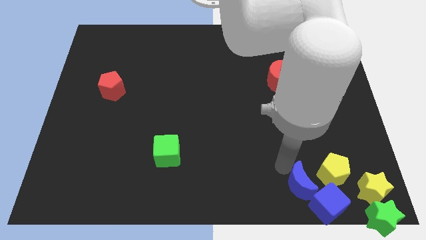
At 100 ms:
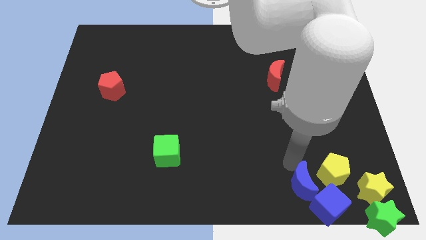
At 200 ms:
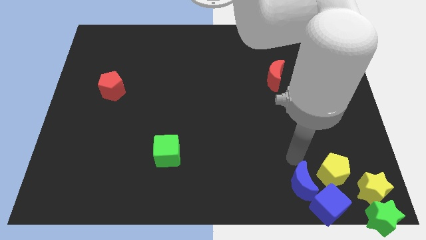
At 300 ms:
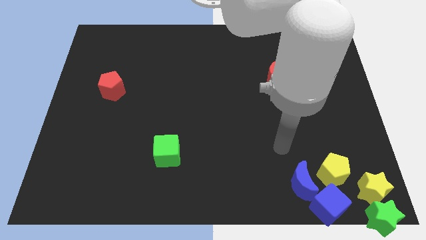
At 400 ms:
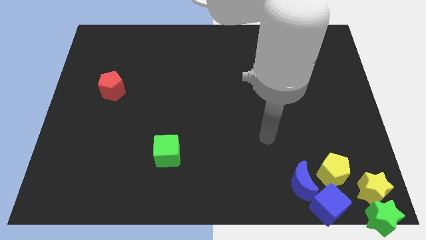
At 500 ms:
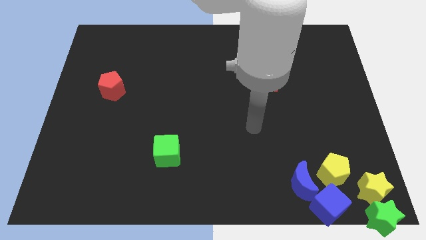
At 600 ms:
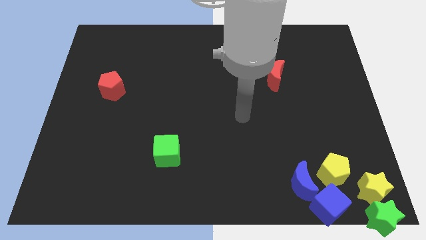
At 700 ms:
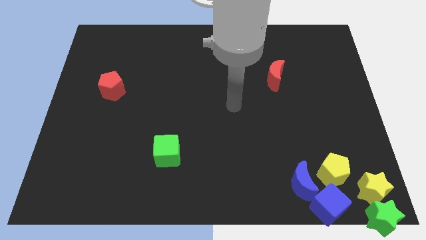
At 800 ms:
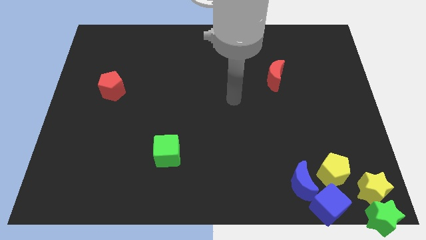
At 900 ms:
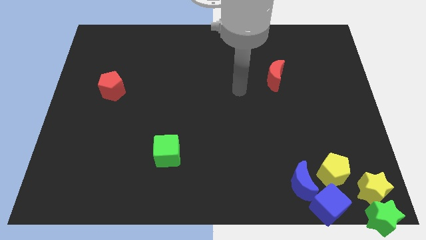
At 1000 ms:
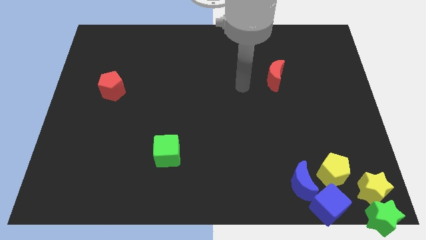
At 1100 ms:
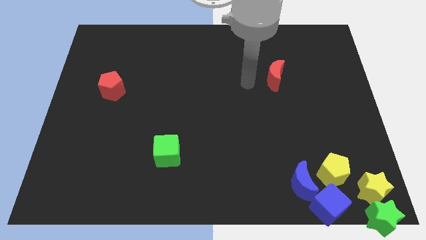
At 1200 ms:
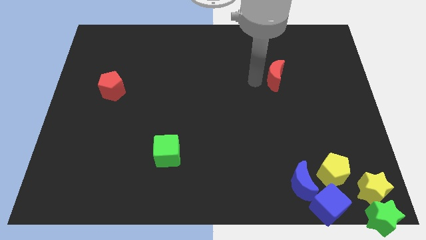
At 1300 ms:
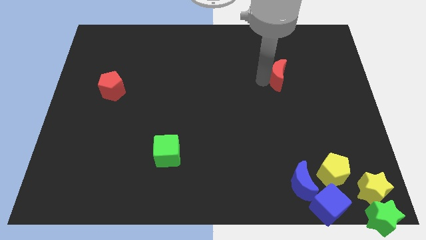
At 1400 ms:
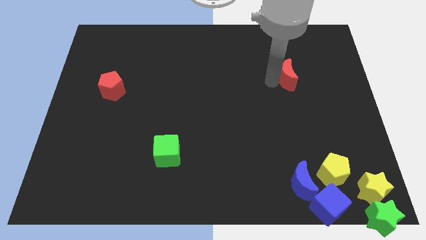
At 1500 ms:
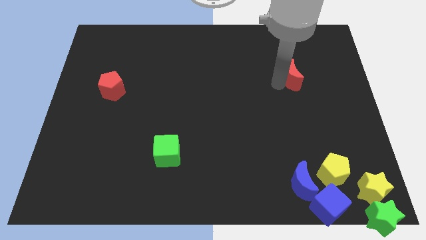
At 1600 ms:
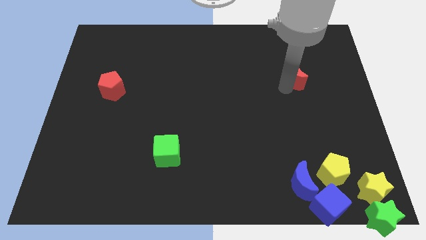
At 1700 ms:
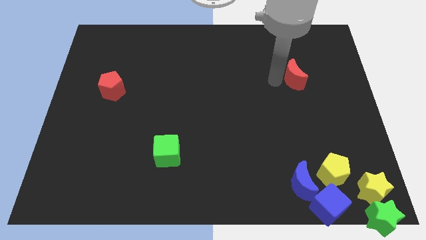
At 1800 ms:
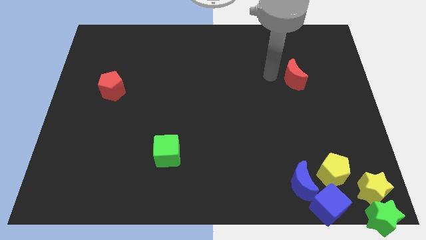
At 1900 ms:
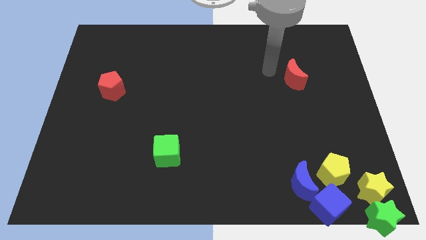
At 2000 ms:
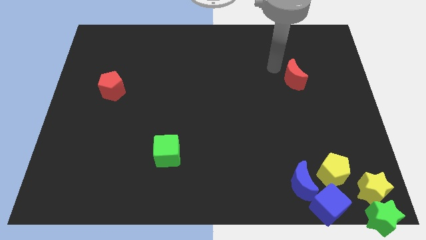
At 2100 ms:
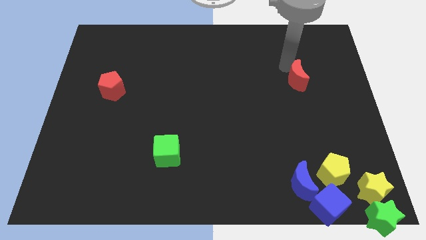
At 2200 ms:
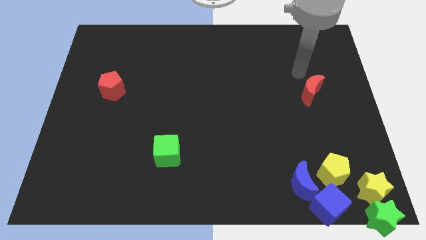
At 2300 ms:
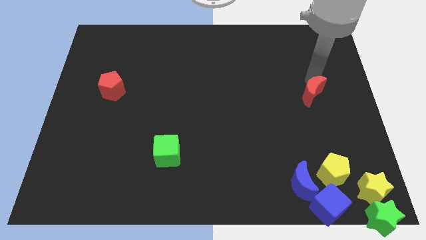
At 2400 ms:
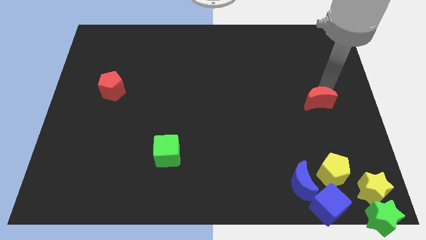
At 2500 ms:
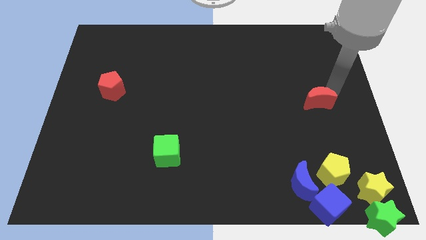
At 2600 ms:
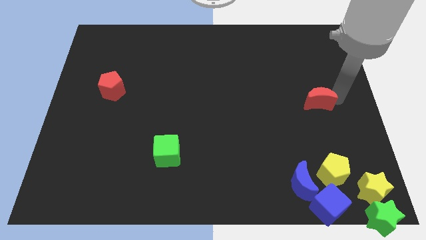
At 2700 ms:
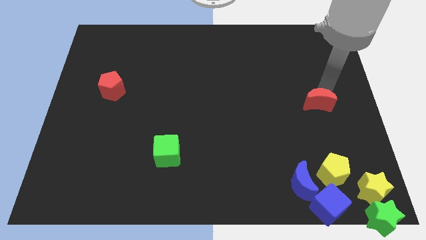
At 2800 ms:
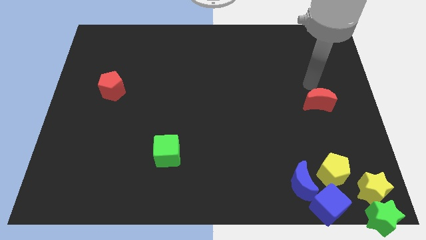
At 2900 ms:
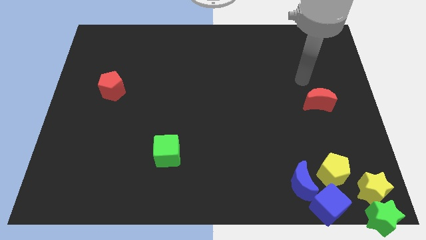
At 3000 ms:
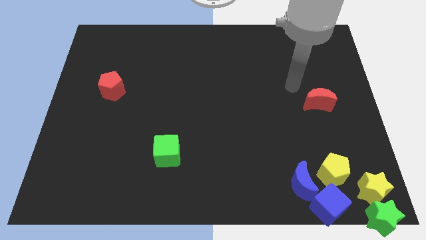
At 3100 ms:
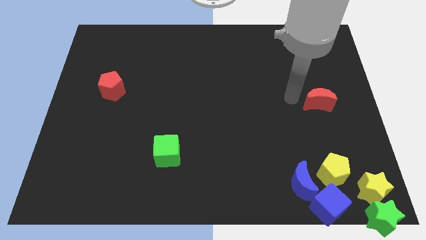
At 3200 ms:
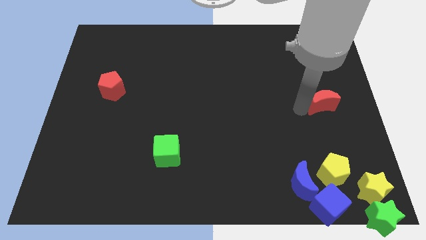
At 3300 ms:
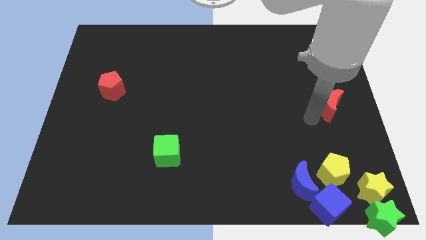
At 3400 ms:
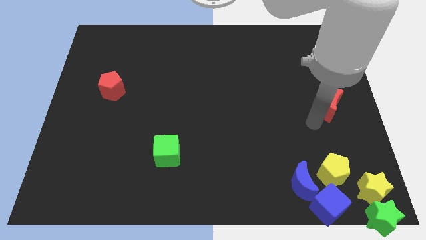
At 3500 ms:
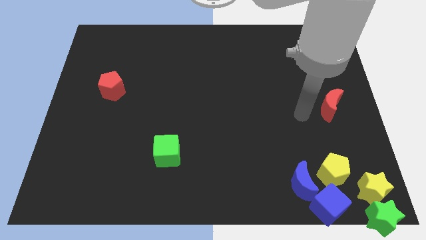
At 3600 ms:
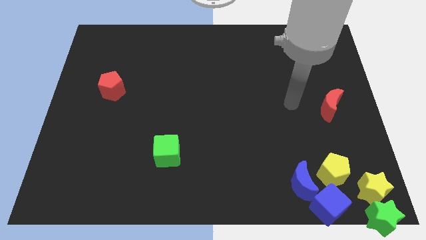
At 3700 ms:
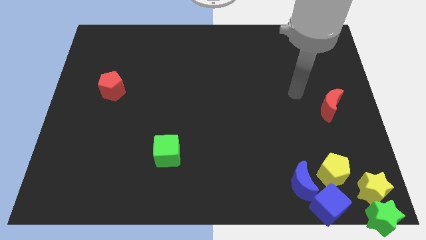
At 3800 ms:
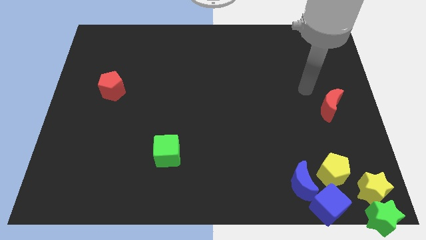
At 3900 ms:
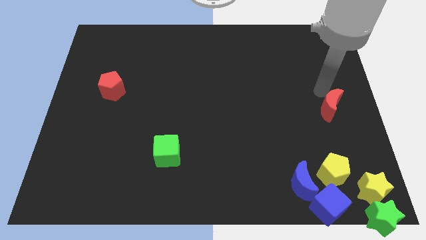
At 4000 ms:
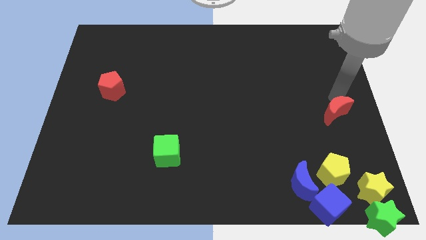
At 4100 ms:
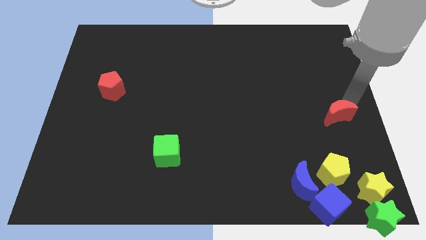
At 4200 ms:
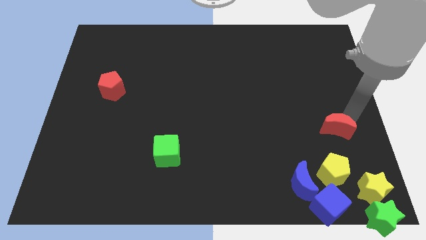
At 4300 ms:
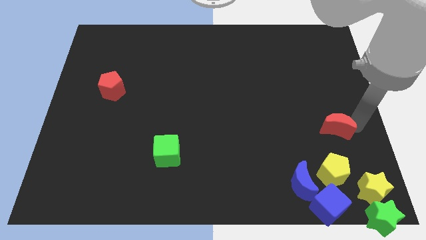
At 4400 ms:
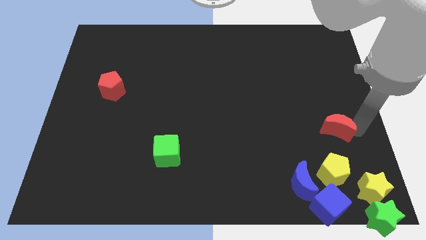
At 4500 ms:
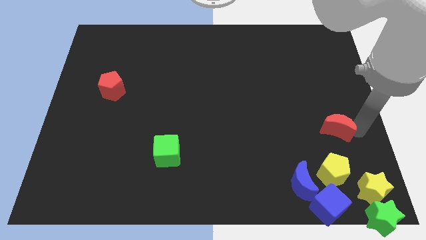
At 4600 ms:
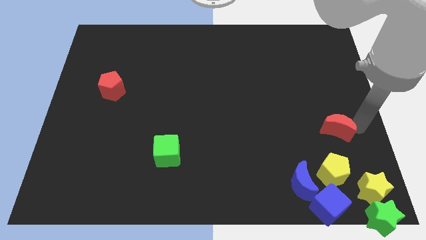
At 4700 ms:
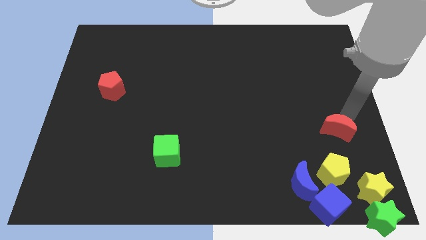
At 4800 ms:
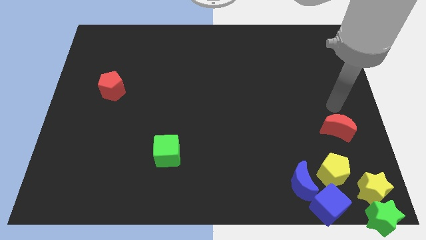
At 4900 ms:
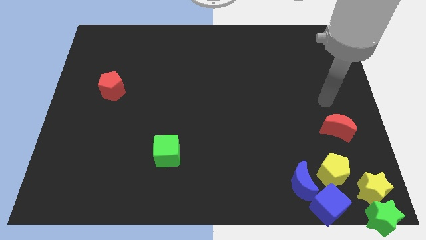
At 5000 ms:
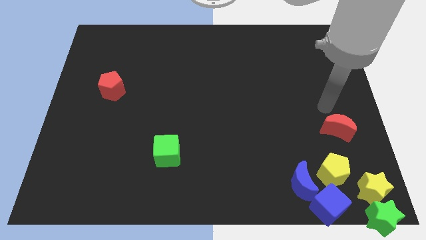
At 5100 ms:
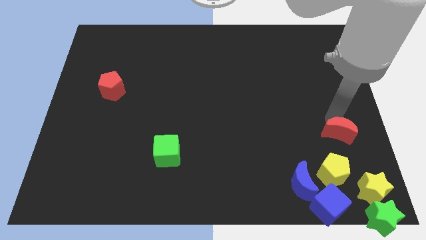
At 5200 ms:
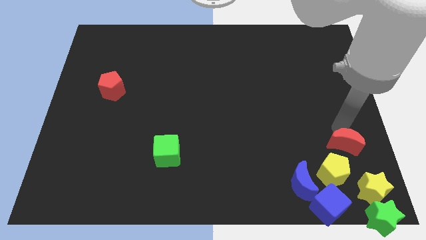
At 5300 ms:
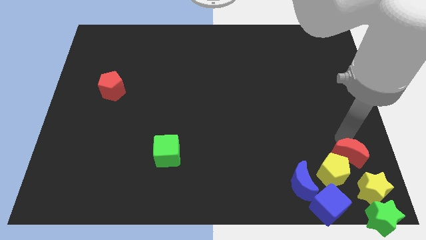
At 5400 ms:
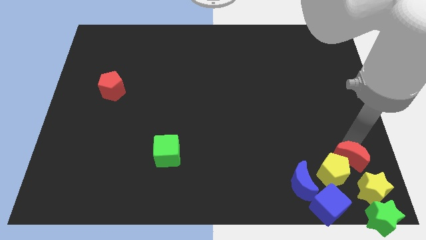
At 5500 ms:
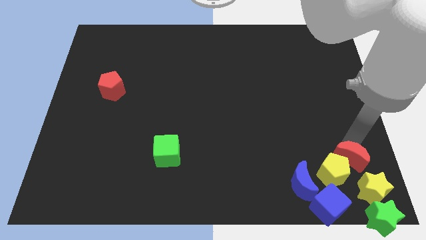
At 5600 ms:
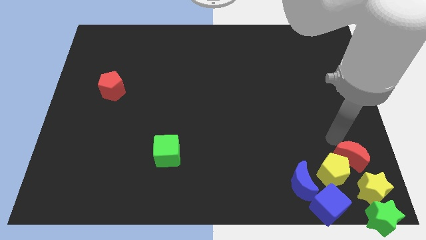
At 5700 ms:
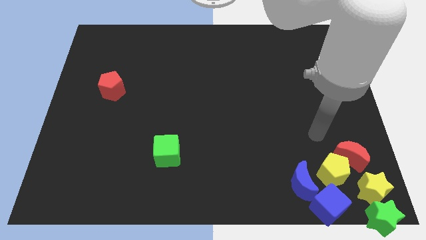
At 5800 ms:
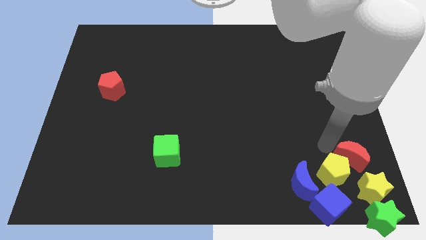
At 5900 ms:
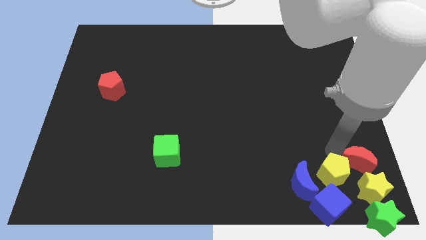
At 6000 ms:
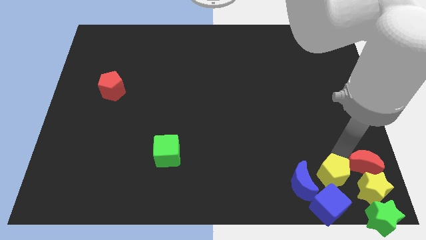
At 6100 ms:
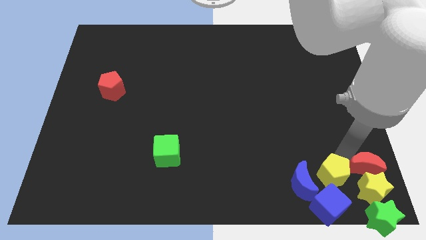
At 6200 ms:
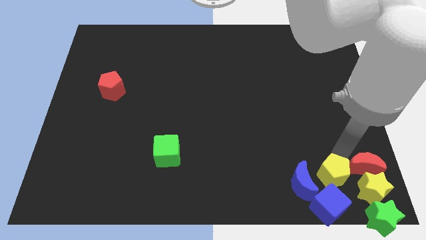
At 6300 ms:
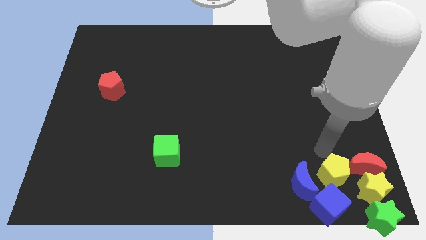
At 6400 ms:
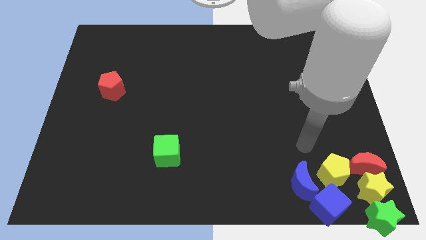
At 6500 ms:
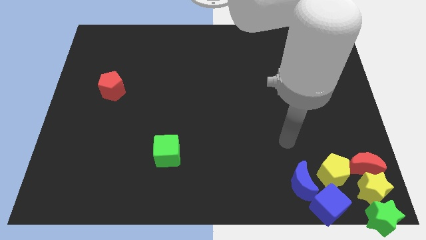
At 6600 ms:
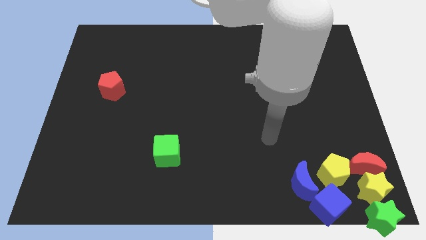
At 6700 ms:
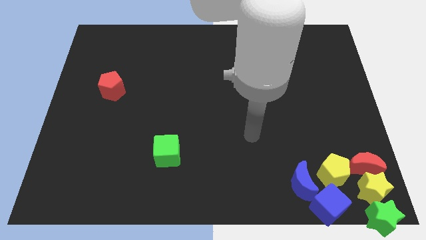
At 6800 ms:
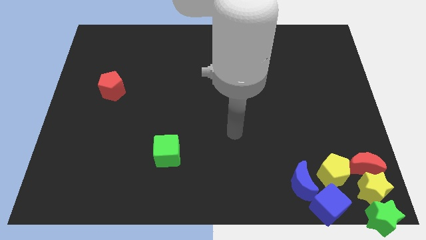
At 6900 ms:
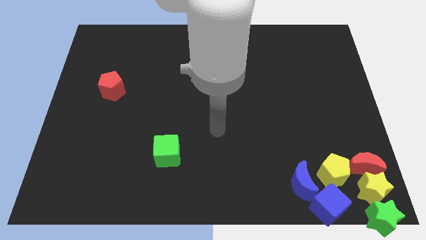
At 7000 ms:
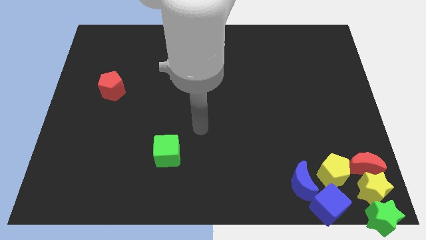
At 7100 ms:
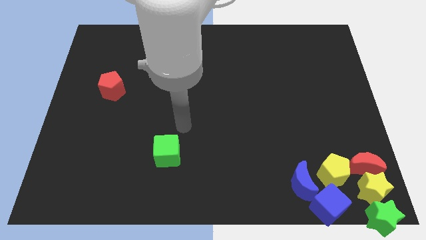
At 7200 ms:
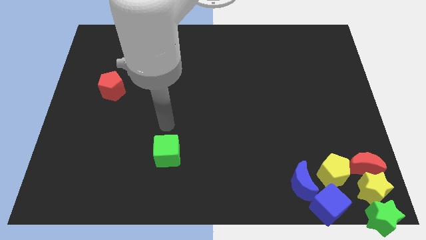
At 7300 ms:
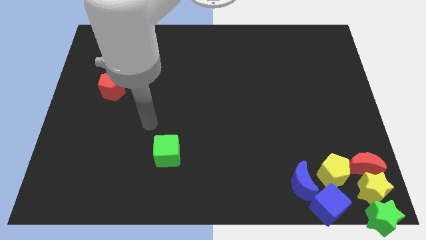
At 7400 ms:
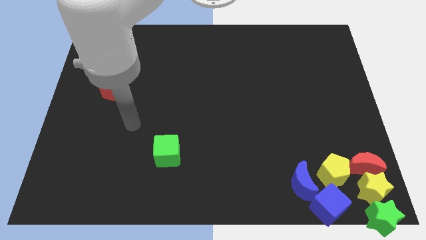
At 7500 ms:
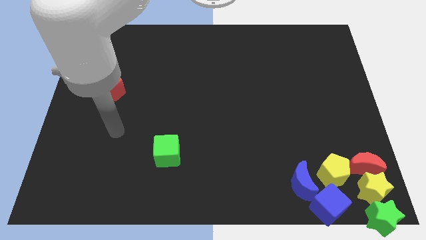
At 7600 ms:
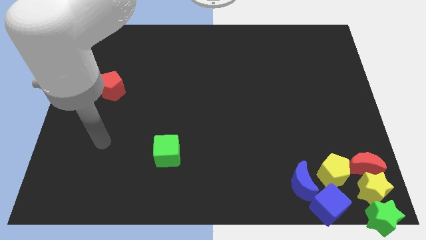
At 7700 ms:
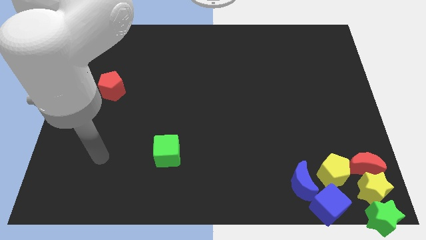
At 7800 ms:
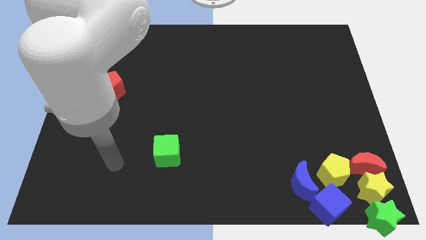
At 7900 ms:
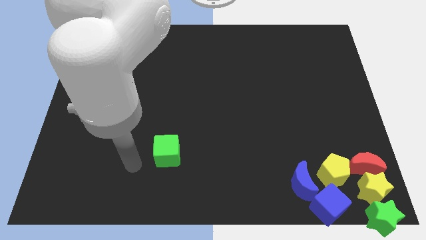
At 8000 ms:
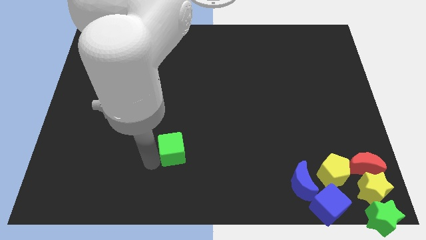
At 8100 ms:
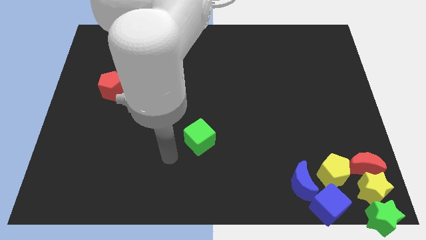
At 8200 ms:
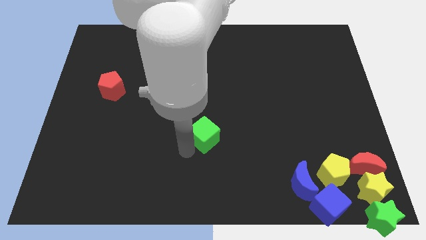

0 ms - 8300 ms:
place the red moon bottom towards right side of the board

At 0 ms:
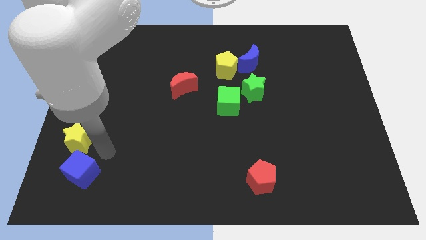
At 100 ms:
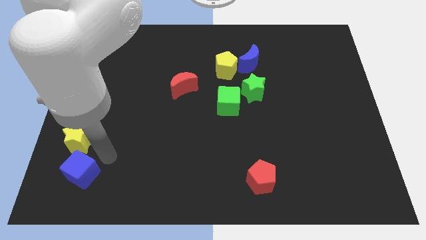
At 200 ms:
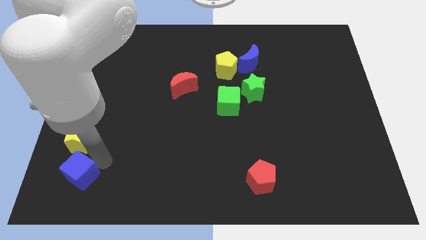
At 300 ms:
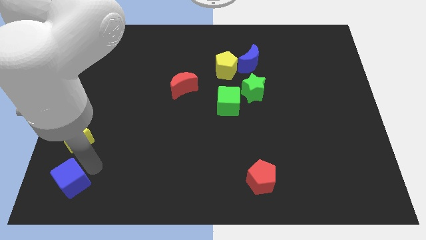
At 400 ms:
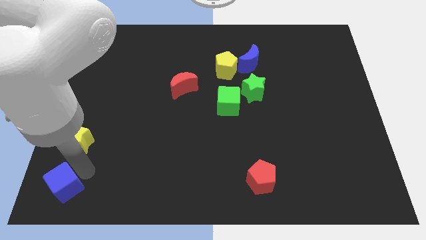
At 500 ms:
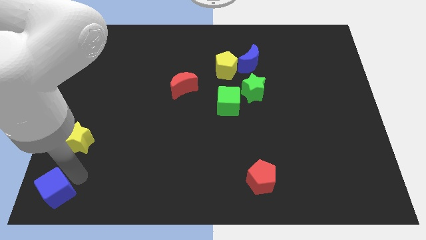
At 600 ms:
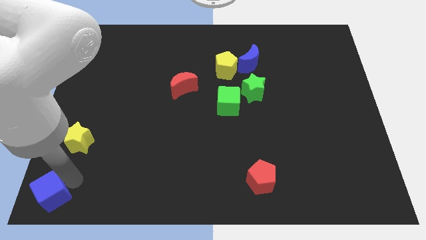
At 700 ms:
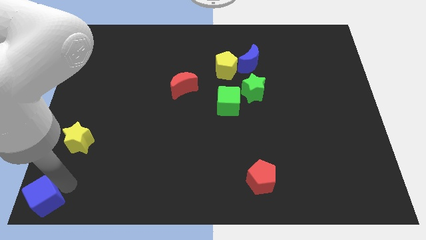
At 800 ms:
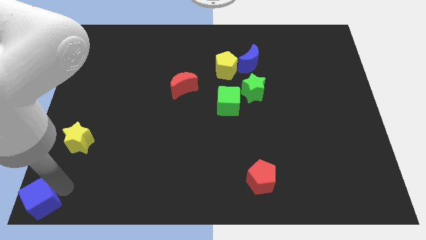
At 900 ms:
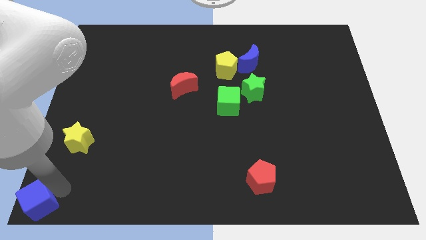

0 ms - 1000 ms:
move blue cube to bottom left corner
